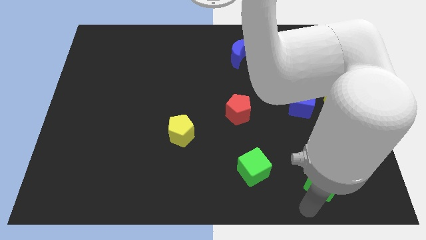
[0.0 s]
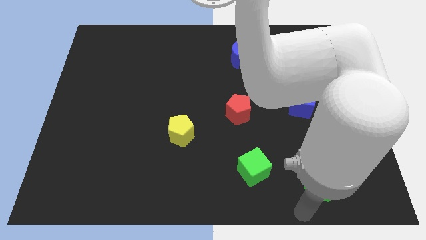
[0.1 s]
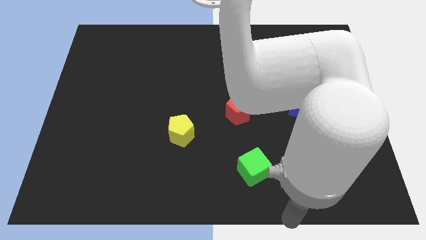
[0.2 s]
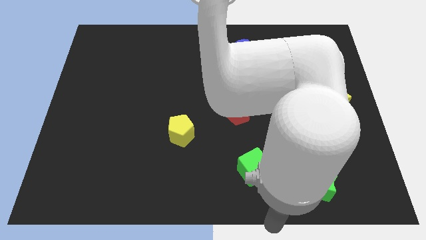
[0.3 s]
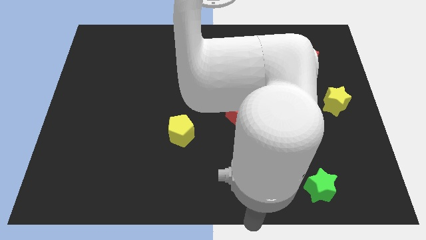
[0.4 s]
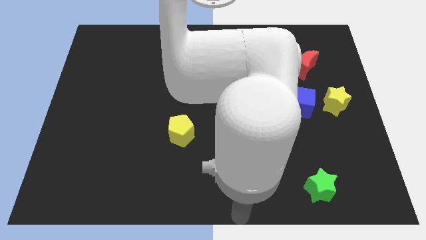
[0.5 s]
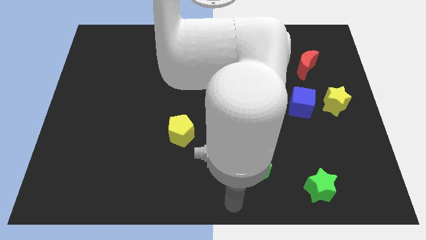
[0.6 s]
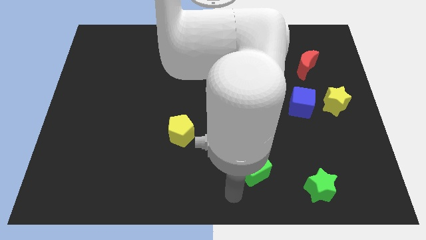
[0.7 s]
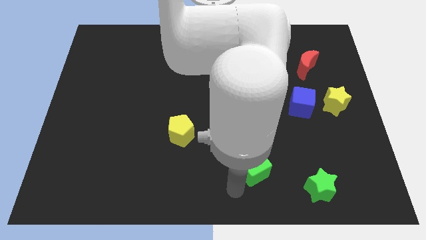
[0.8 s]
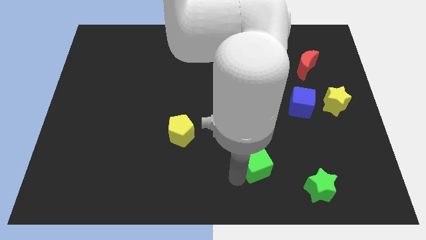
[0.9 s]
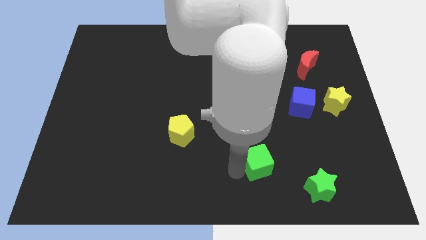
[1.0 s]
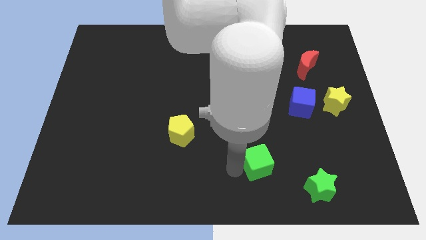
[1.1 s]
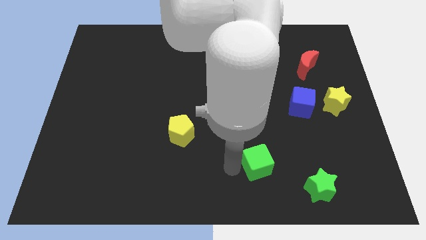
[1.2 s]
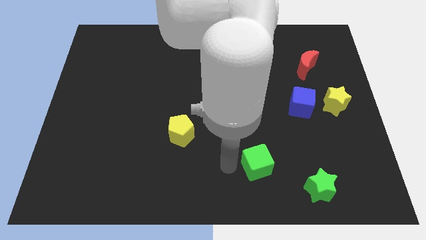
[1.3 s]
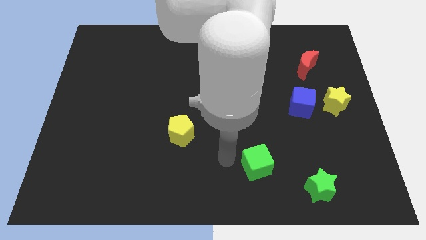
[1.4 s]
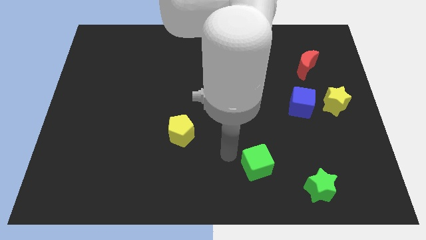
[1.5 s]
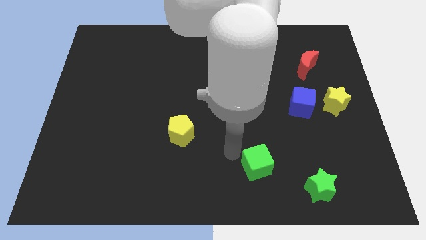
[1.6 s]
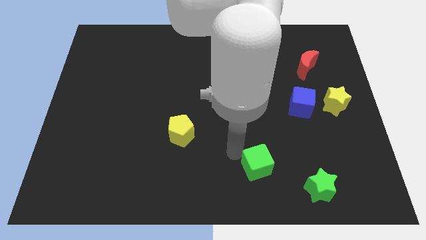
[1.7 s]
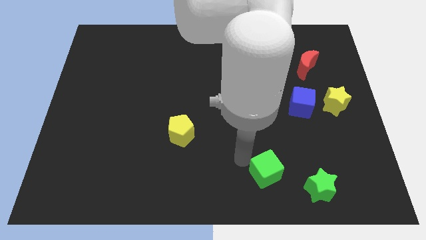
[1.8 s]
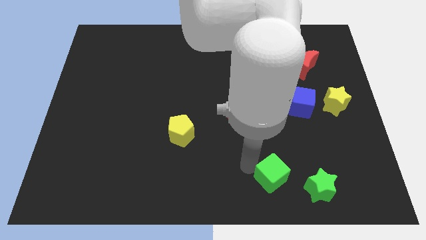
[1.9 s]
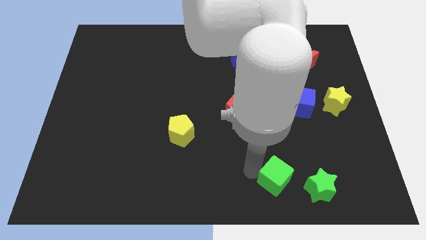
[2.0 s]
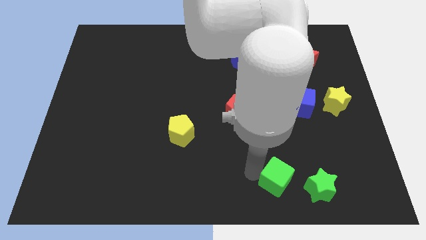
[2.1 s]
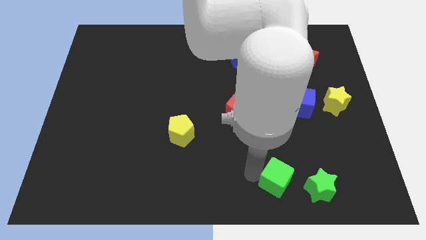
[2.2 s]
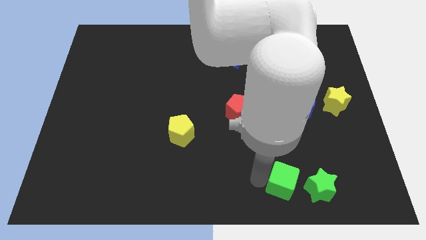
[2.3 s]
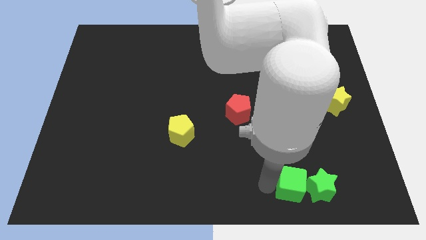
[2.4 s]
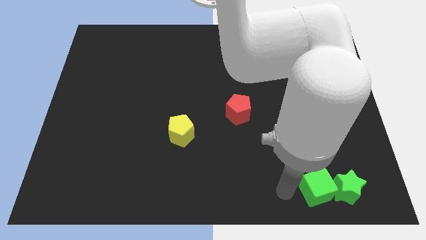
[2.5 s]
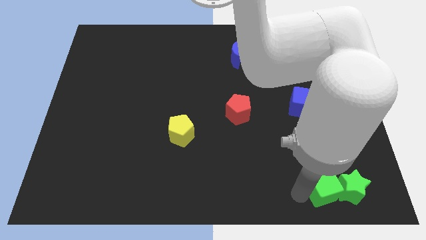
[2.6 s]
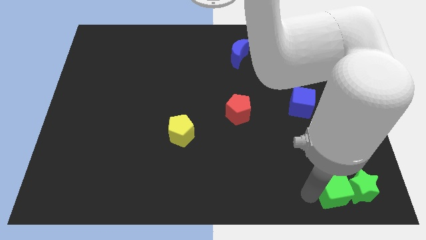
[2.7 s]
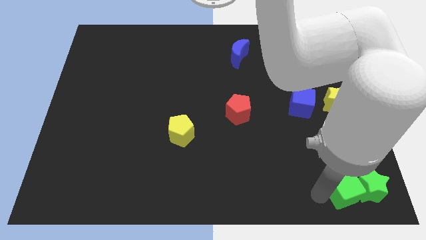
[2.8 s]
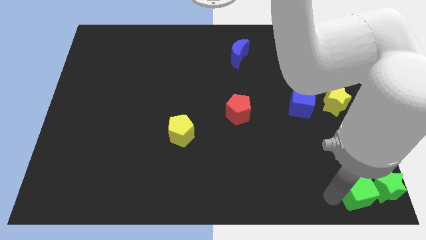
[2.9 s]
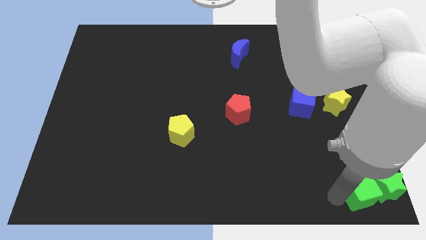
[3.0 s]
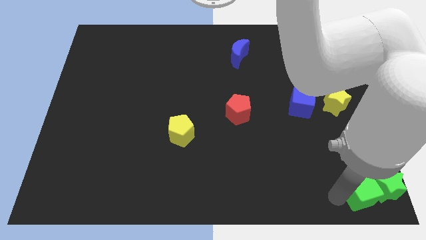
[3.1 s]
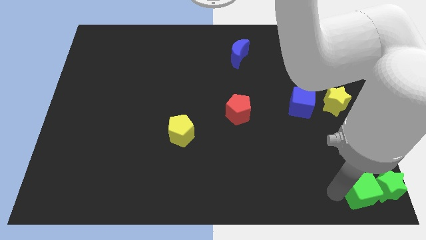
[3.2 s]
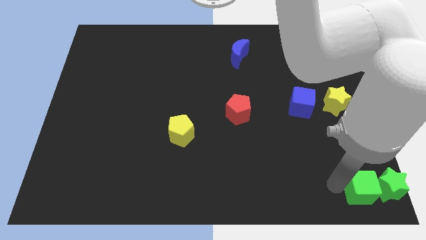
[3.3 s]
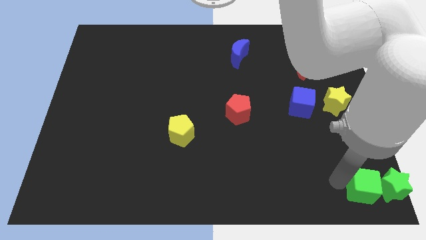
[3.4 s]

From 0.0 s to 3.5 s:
place the green blocks at the bottom right corner of the board

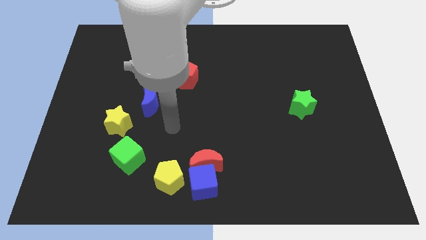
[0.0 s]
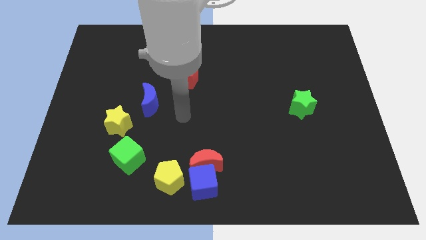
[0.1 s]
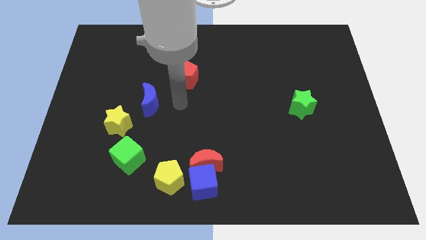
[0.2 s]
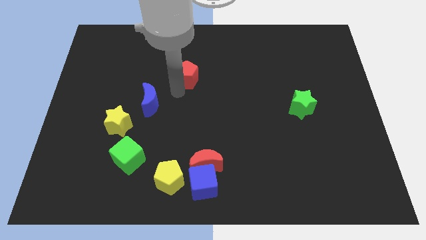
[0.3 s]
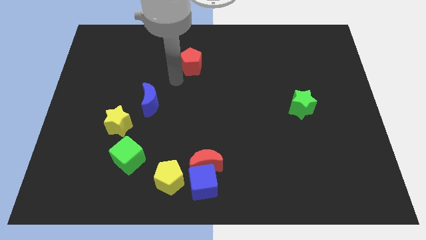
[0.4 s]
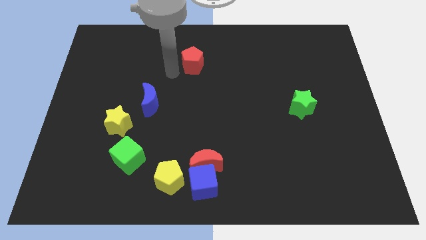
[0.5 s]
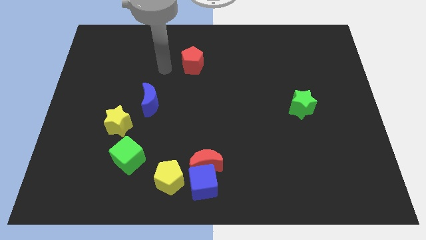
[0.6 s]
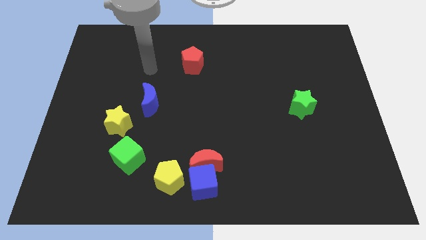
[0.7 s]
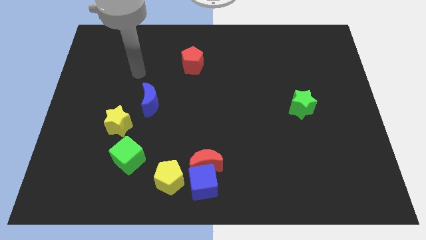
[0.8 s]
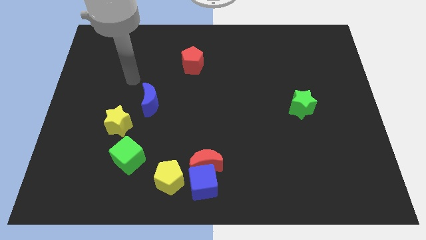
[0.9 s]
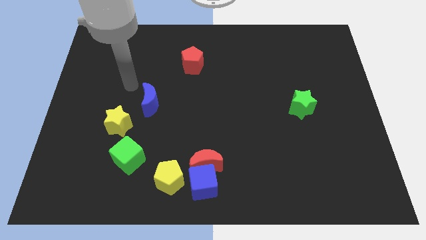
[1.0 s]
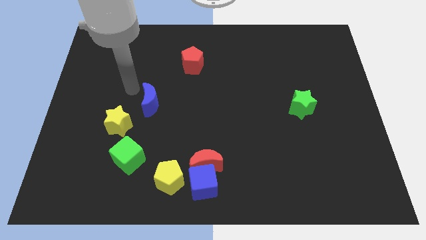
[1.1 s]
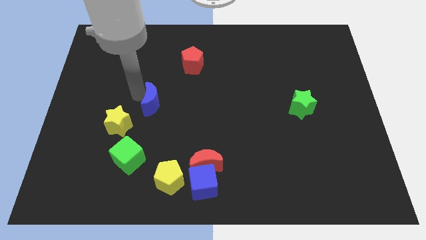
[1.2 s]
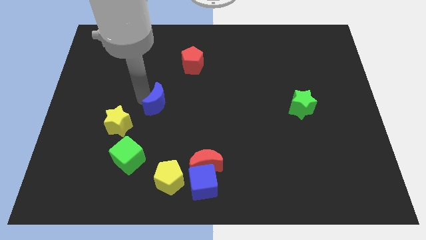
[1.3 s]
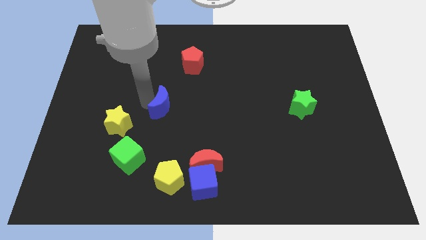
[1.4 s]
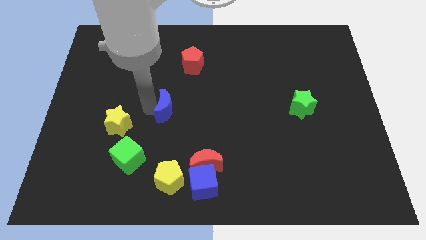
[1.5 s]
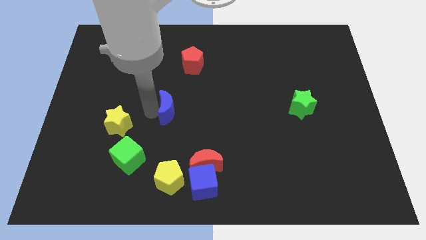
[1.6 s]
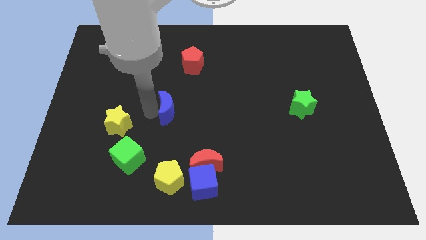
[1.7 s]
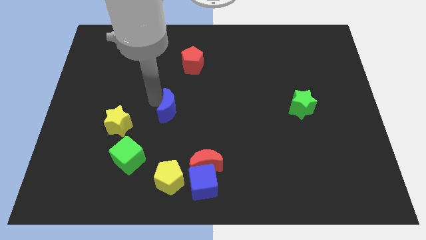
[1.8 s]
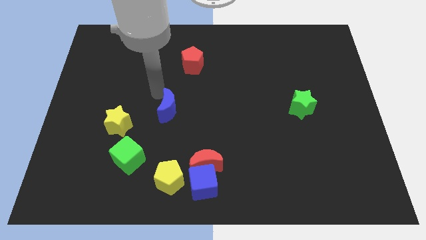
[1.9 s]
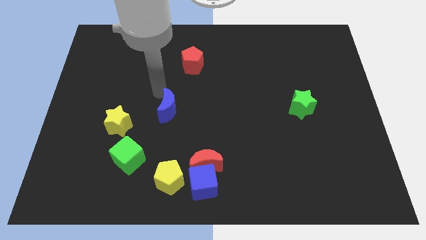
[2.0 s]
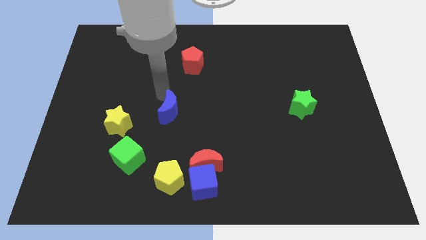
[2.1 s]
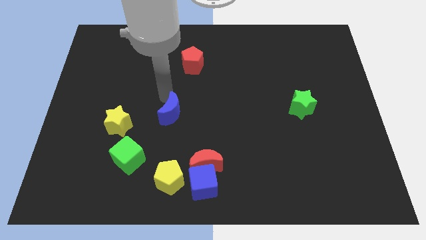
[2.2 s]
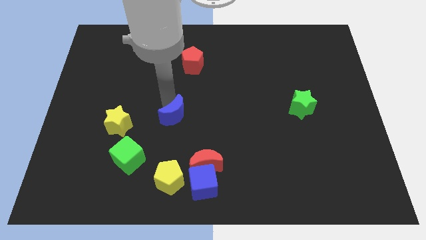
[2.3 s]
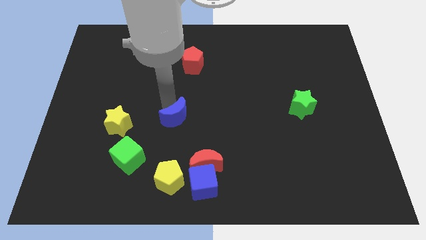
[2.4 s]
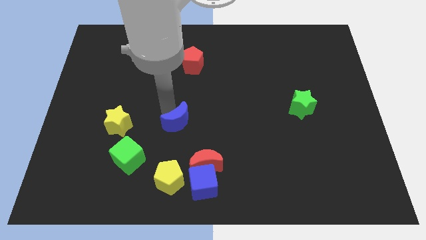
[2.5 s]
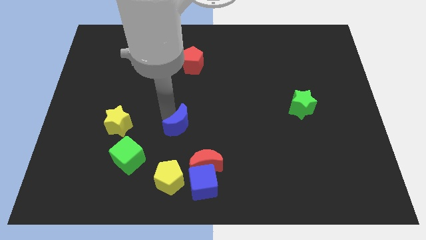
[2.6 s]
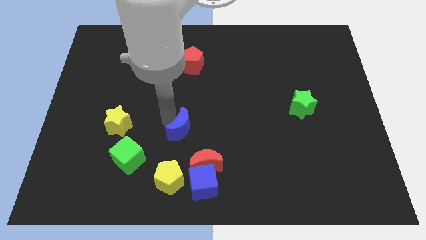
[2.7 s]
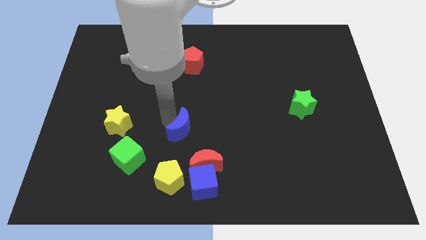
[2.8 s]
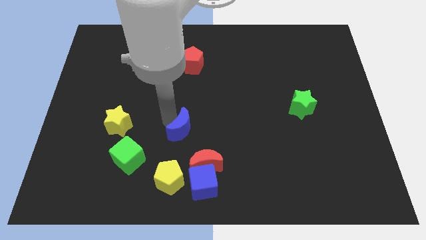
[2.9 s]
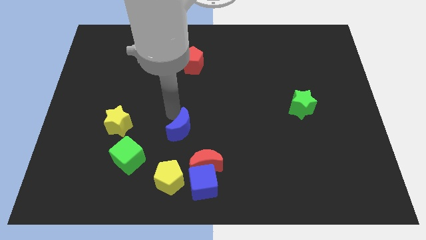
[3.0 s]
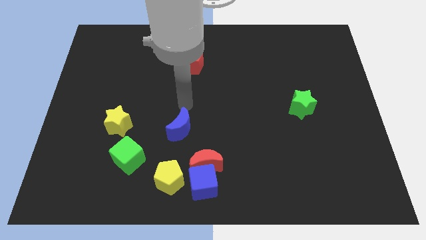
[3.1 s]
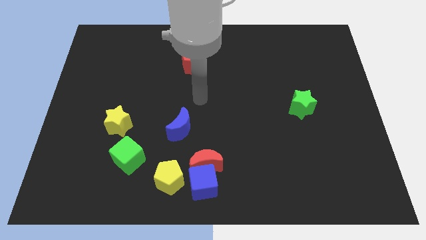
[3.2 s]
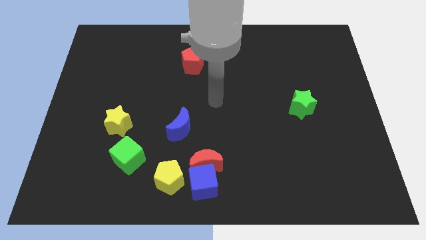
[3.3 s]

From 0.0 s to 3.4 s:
move the red pentagon and the blue moon vertical to each other

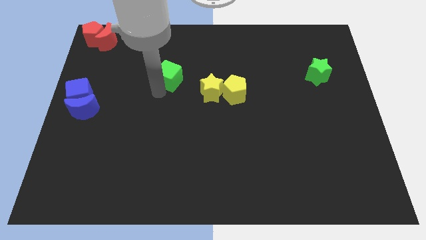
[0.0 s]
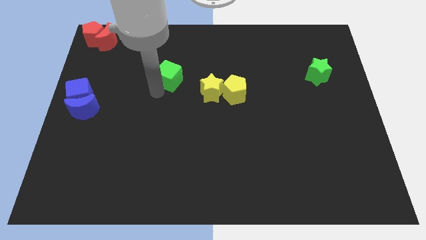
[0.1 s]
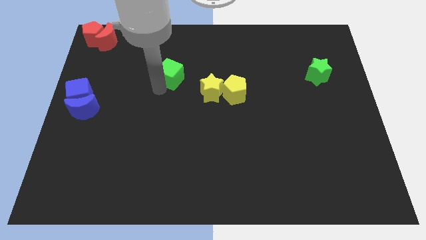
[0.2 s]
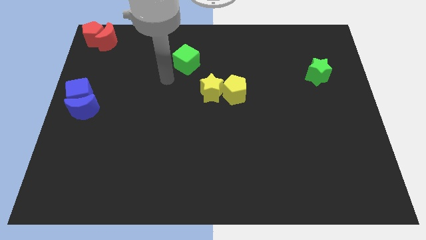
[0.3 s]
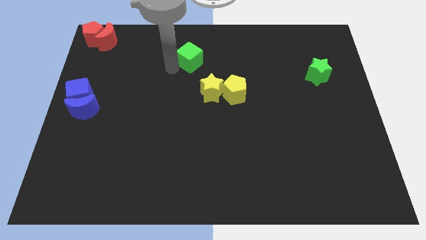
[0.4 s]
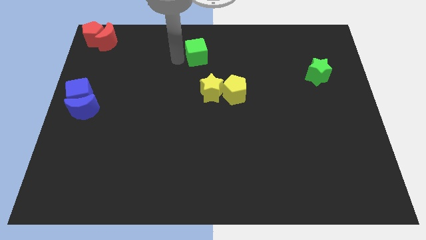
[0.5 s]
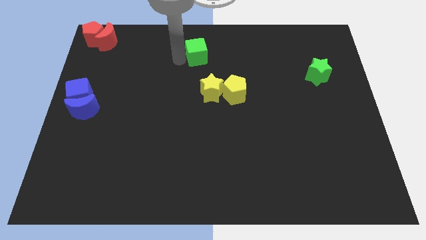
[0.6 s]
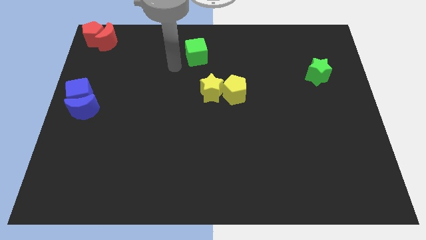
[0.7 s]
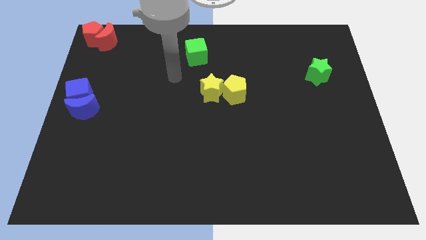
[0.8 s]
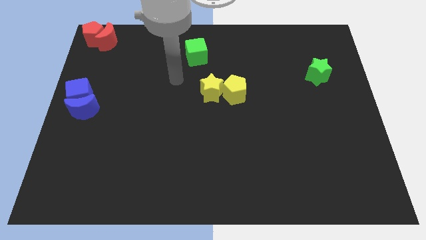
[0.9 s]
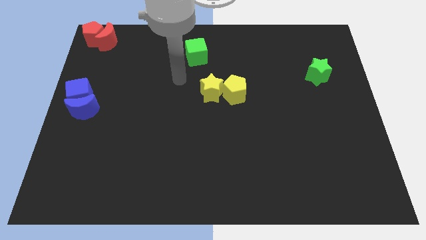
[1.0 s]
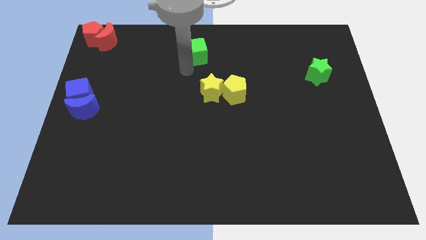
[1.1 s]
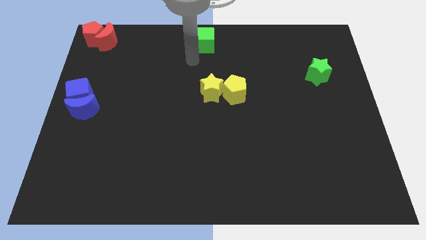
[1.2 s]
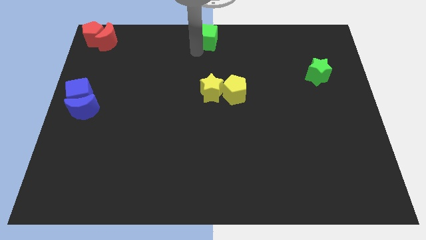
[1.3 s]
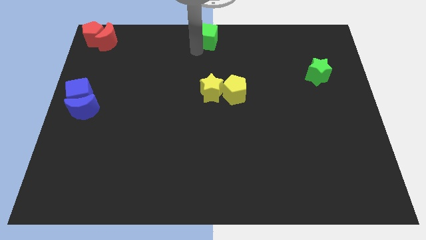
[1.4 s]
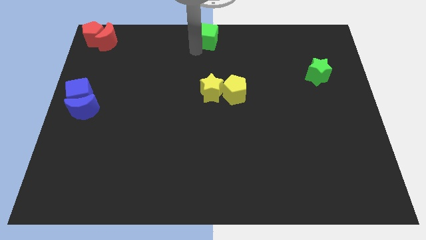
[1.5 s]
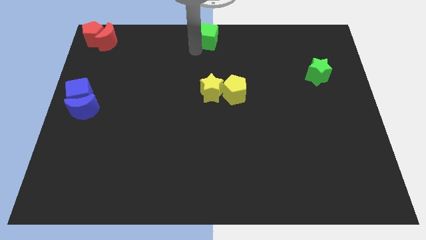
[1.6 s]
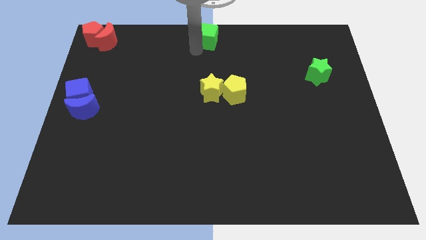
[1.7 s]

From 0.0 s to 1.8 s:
move the green cube to the top center of the board

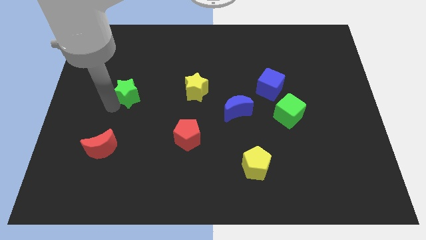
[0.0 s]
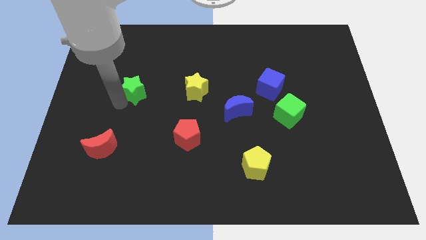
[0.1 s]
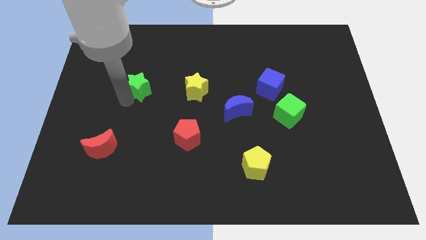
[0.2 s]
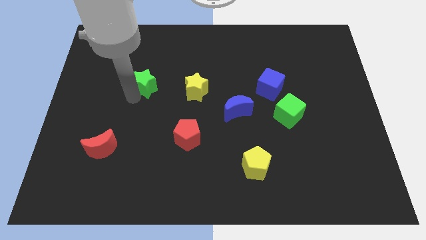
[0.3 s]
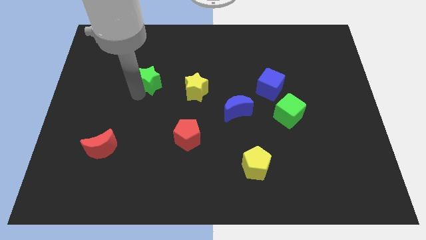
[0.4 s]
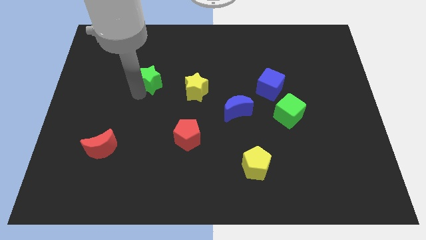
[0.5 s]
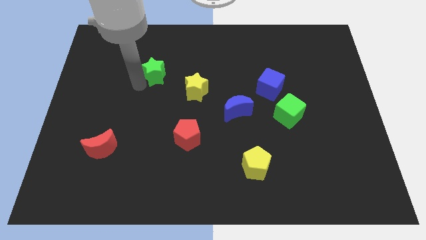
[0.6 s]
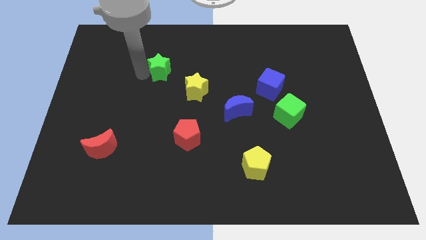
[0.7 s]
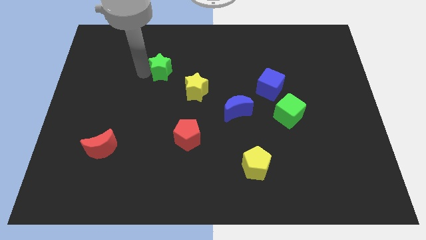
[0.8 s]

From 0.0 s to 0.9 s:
push the green star diagonally top left of the yellow star
